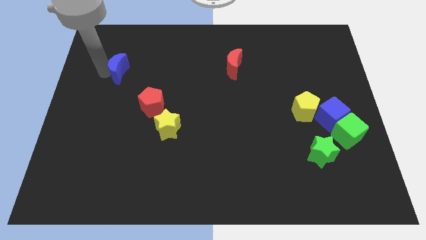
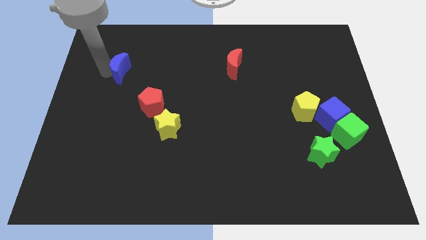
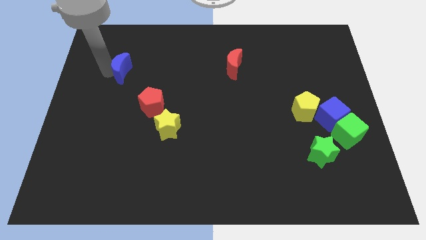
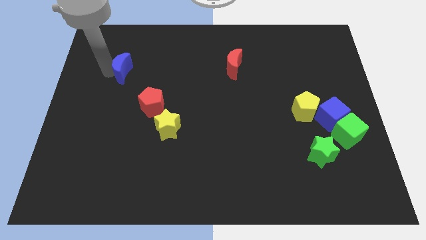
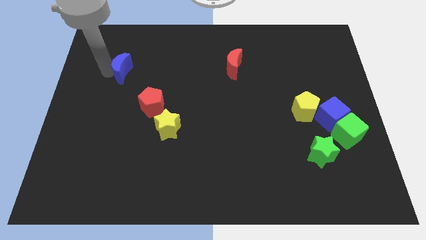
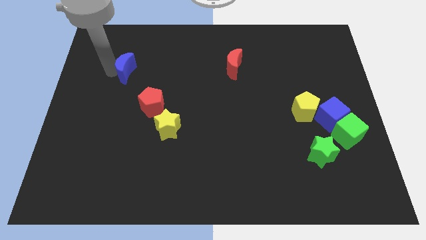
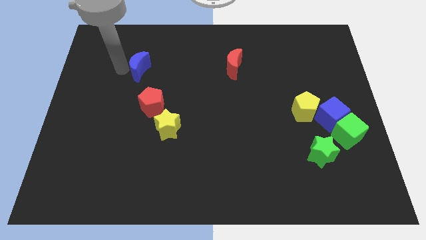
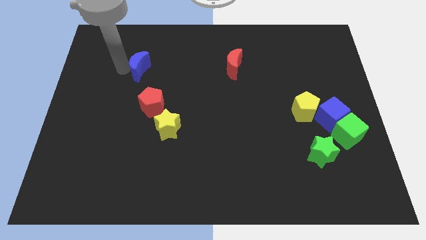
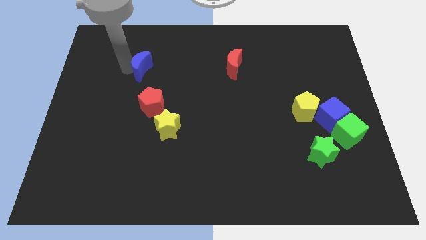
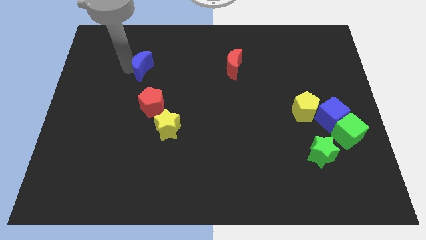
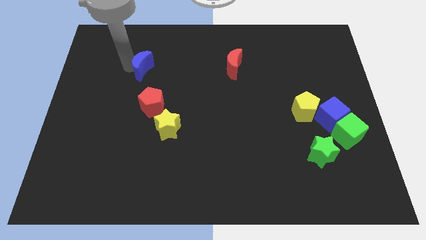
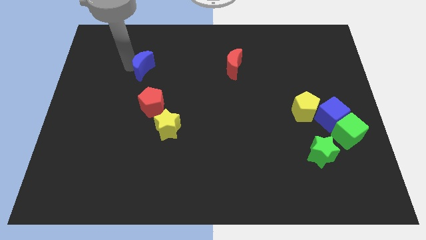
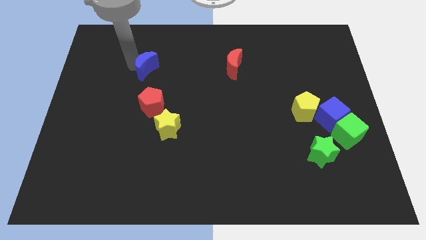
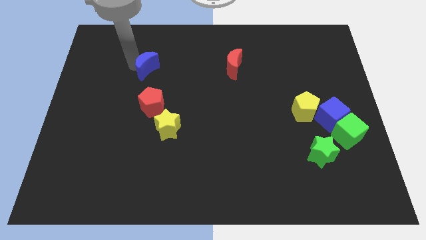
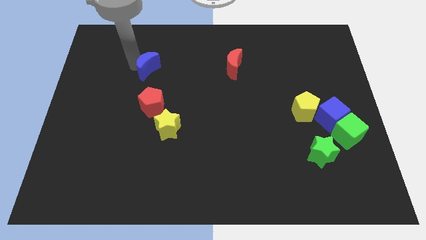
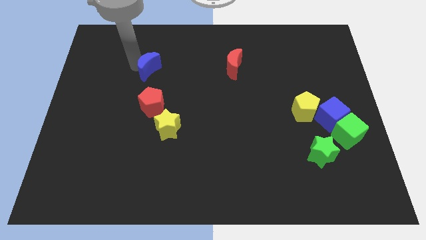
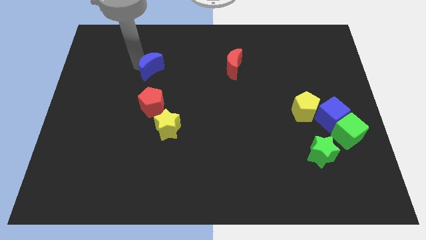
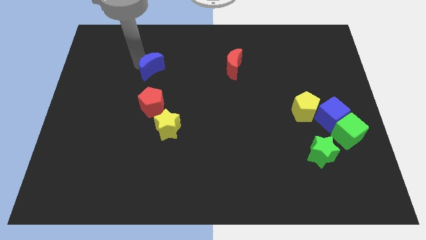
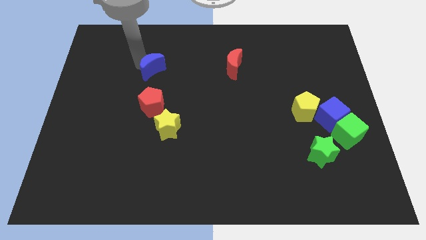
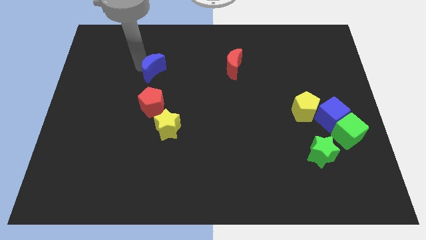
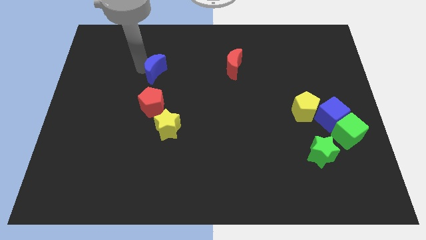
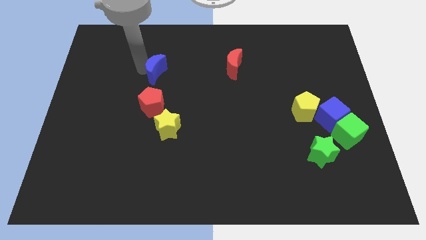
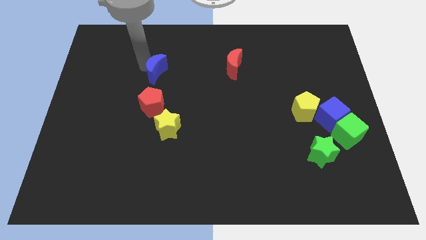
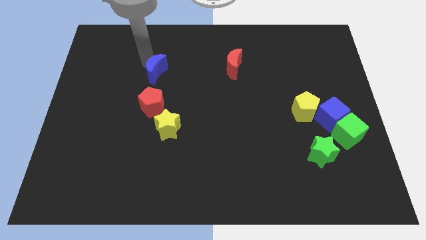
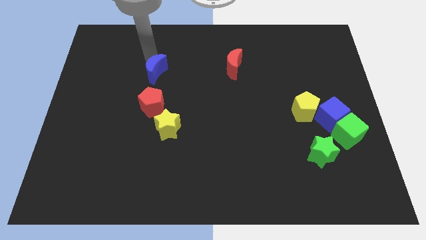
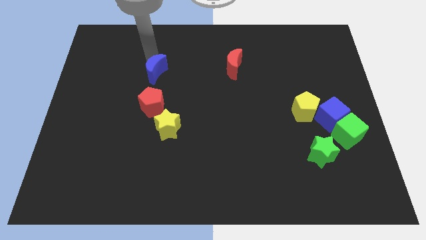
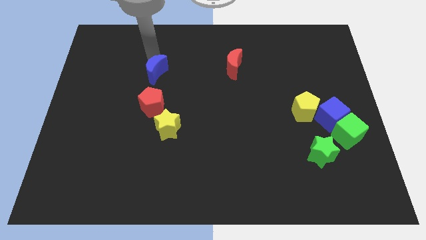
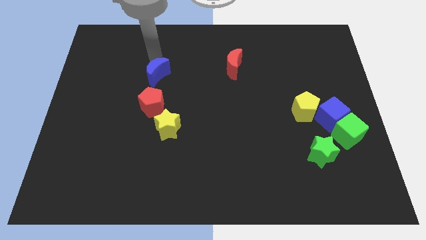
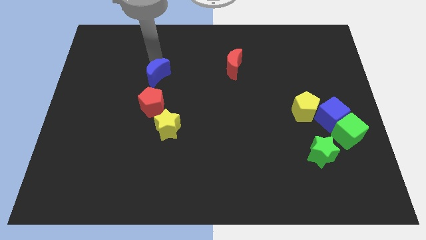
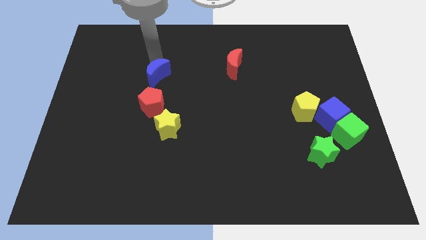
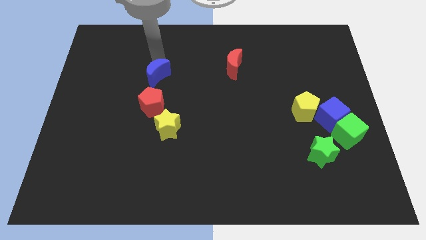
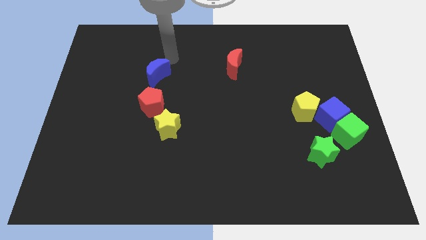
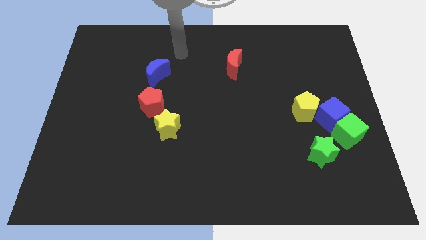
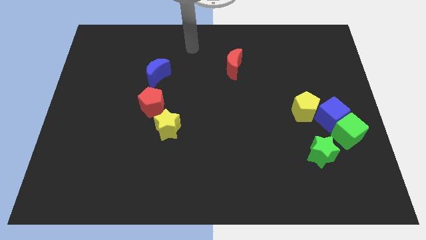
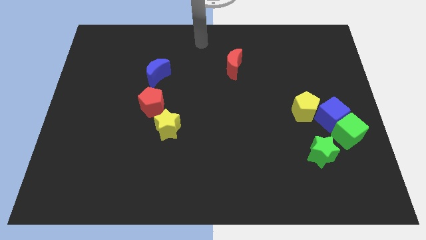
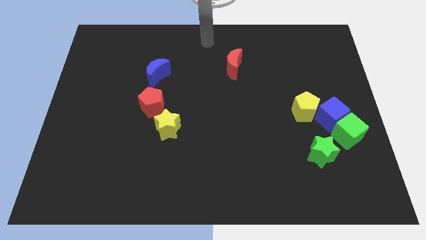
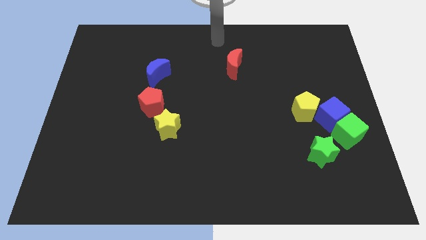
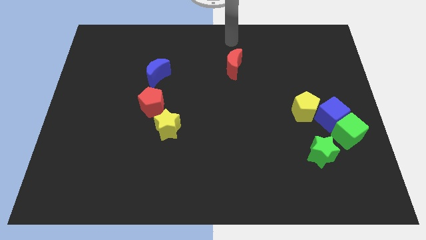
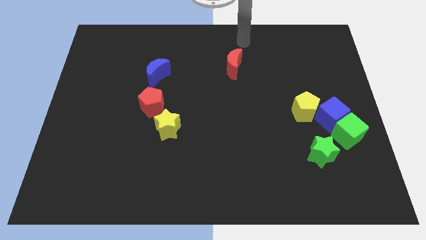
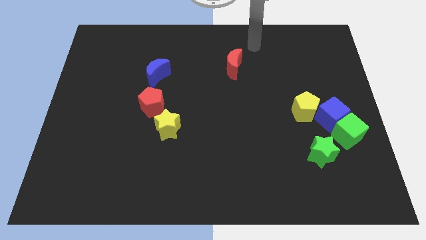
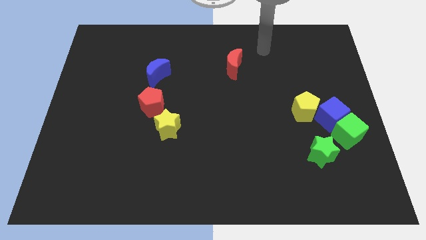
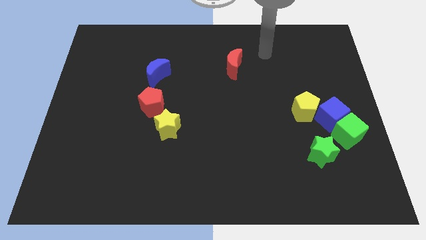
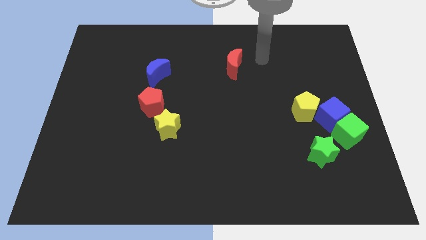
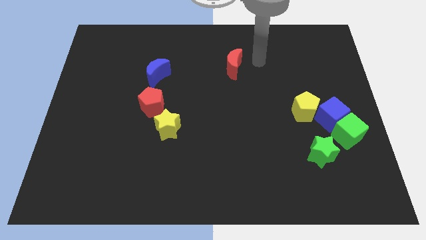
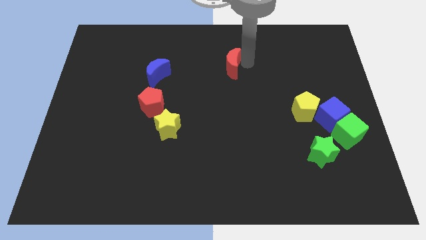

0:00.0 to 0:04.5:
move the blue crescent parallel to the left of the red crescent

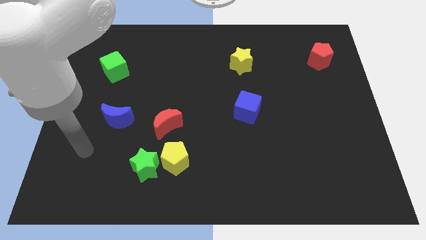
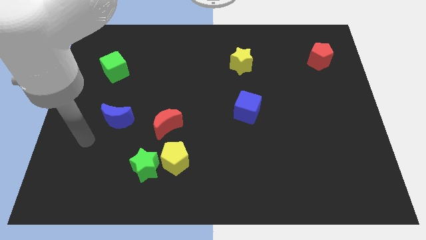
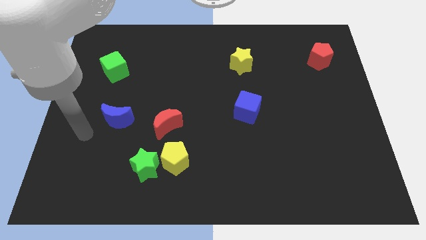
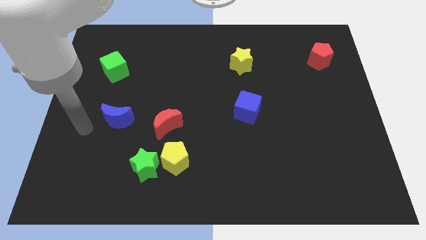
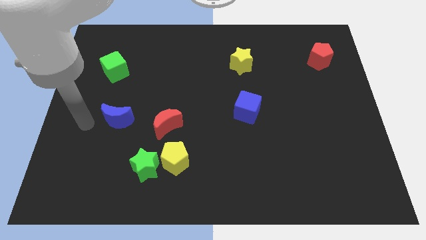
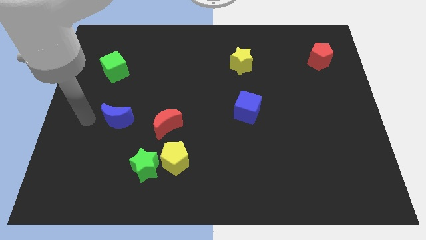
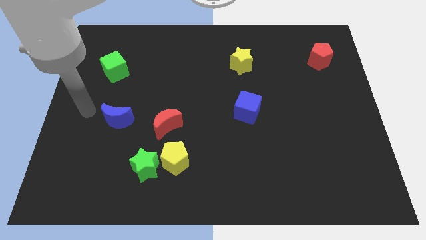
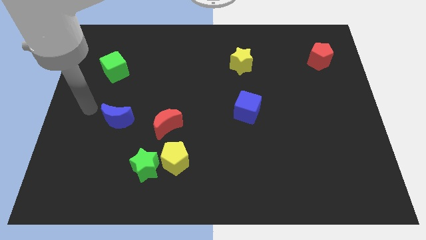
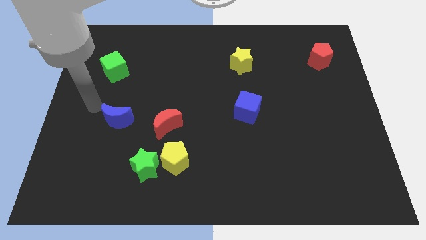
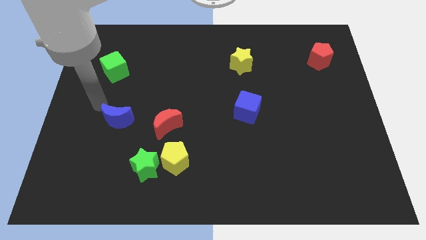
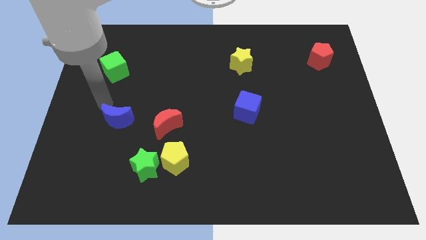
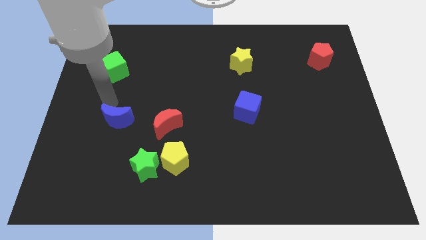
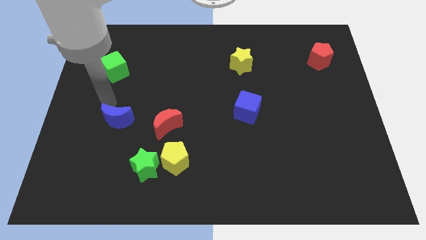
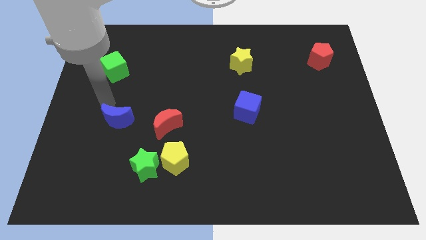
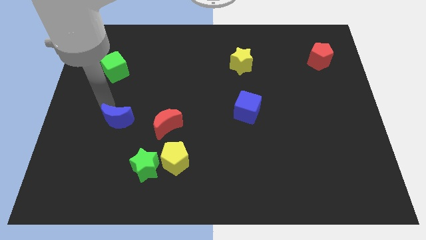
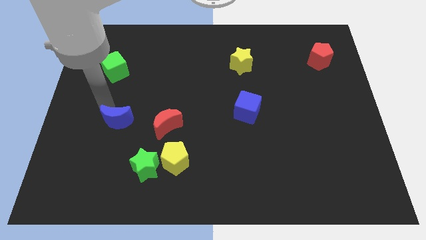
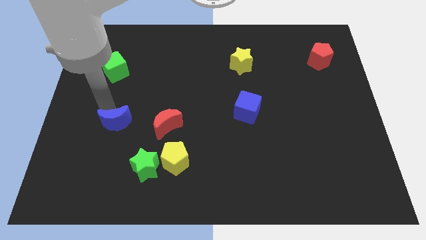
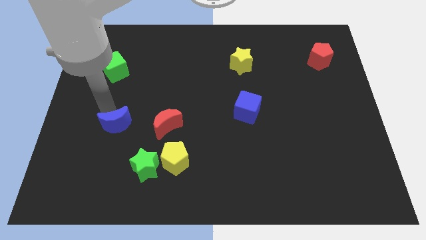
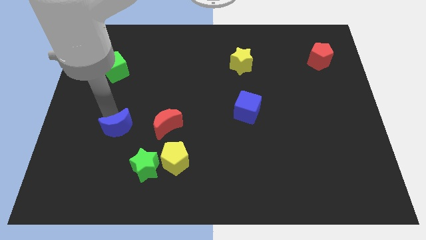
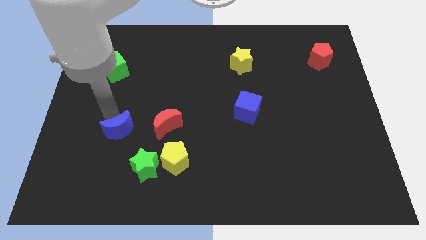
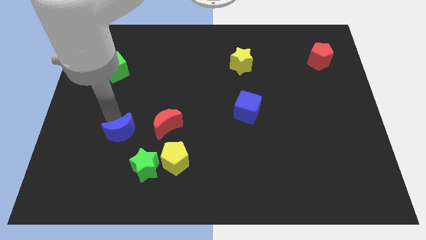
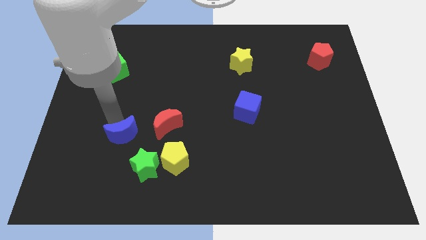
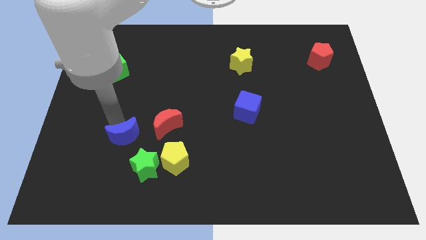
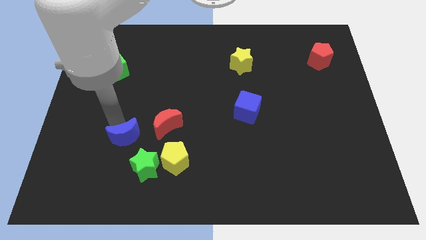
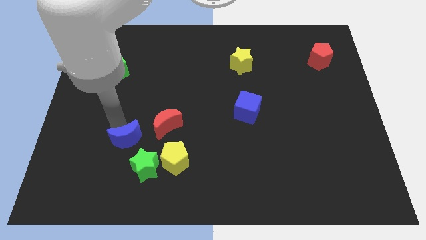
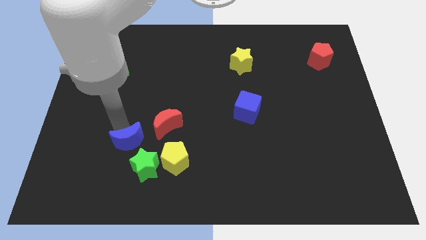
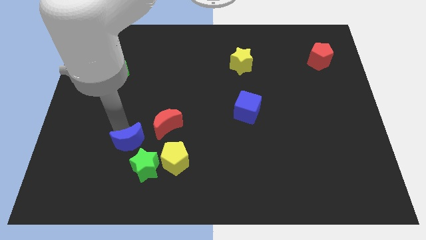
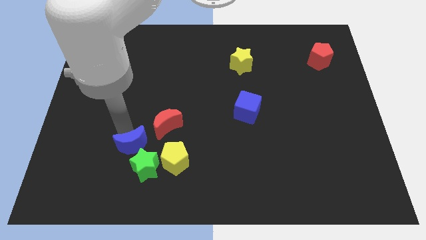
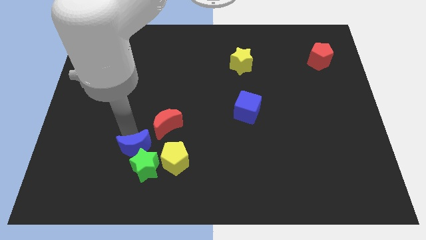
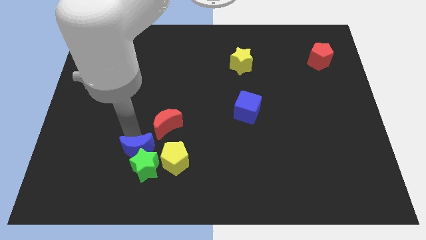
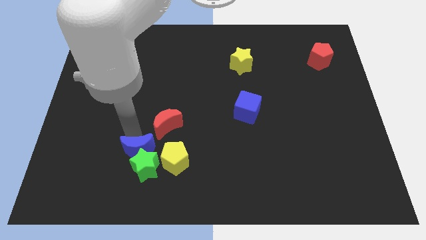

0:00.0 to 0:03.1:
push the blue moon downward

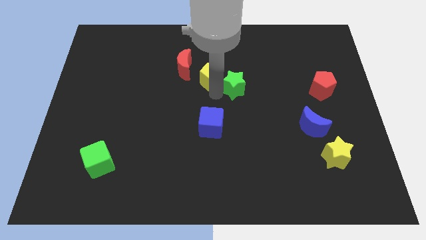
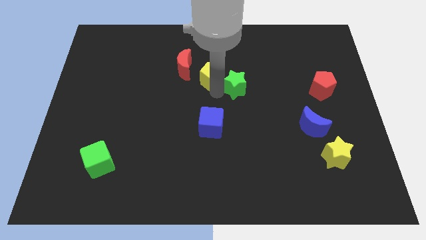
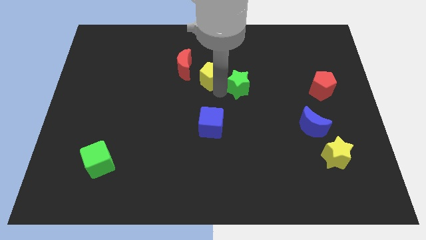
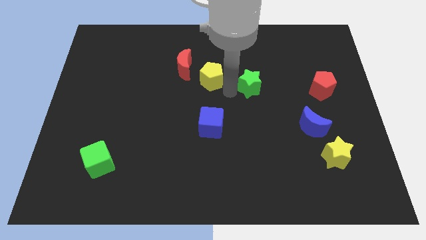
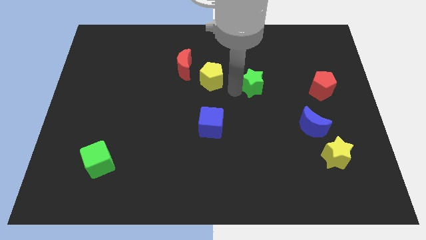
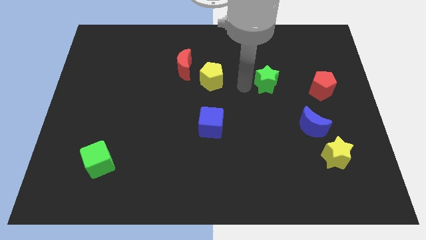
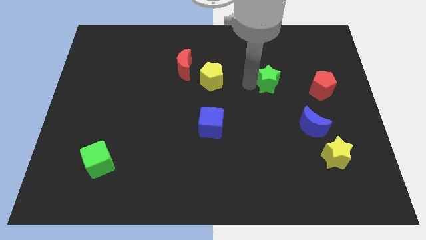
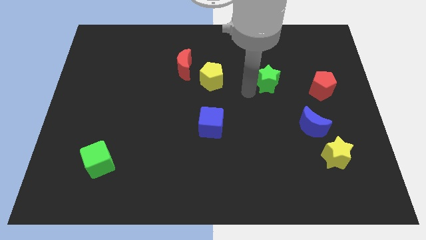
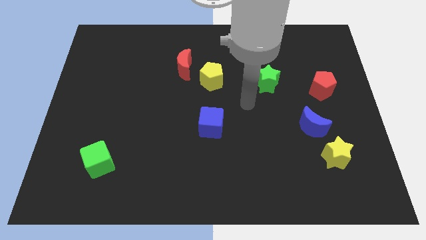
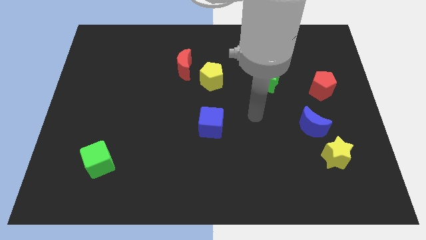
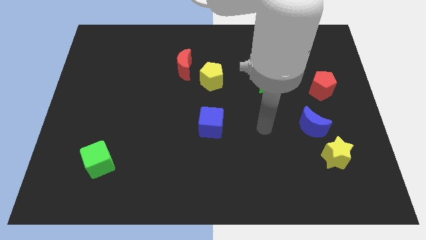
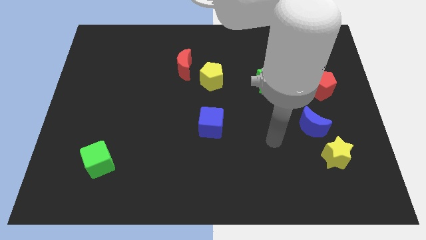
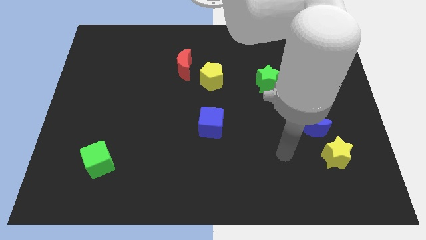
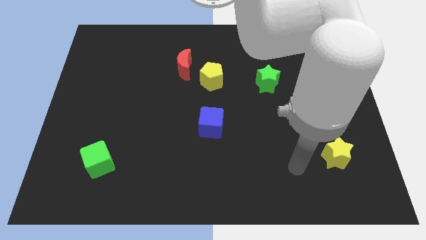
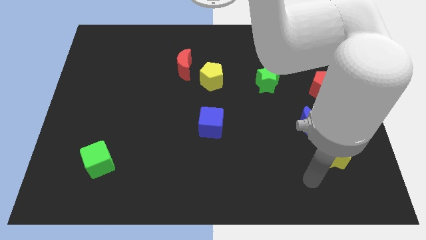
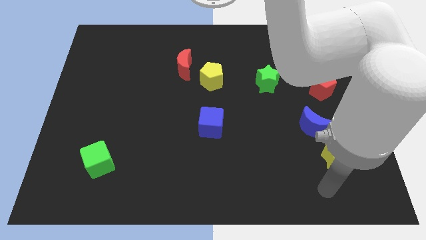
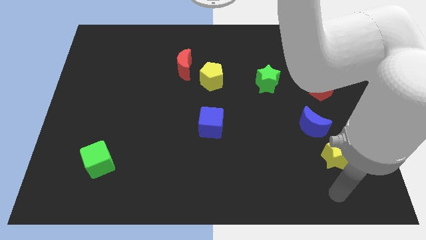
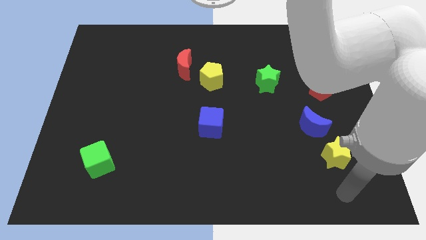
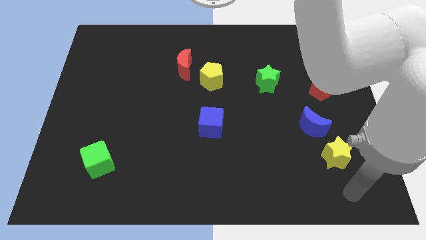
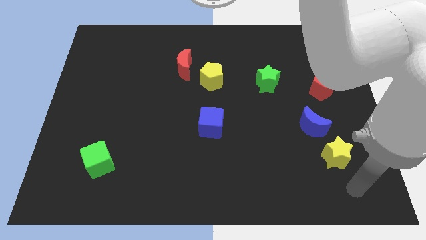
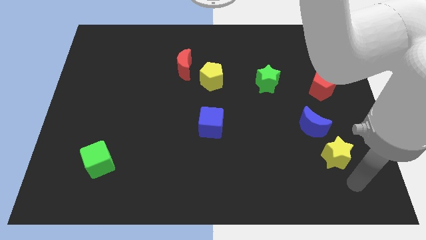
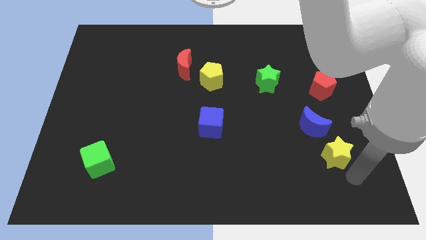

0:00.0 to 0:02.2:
move the arm towards the bottom right
